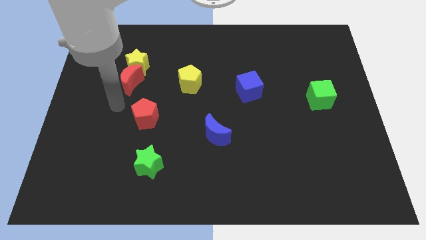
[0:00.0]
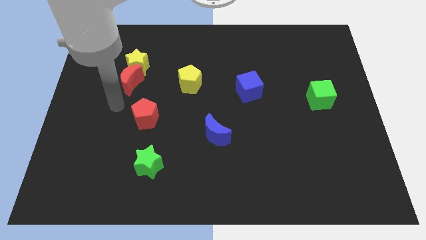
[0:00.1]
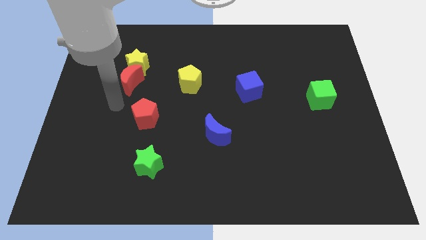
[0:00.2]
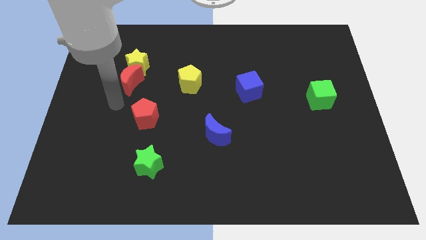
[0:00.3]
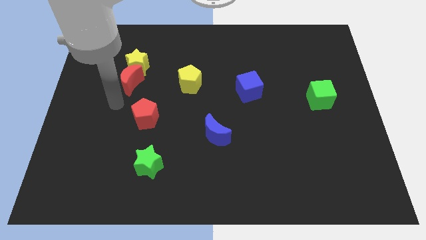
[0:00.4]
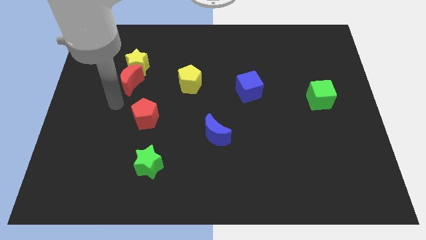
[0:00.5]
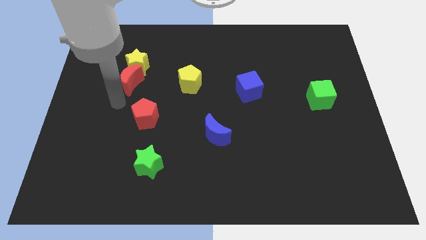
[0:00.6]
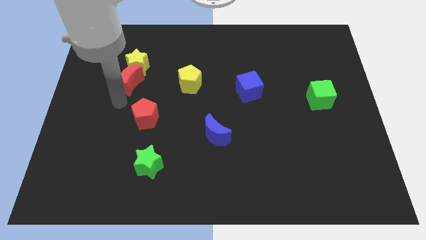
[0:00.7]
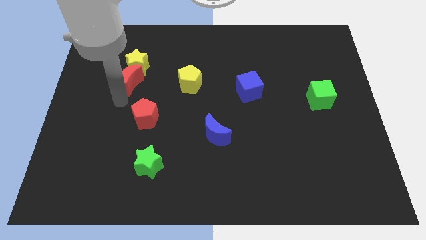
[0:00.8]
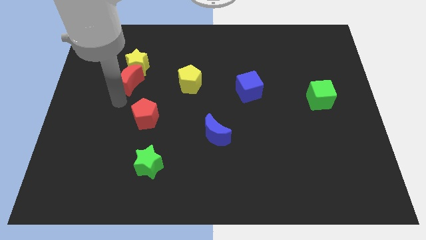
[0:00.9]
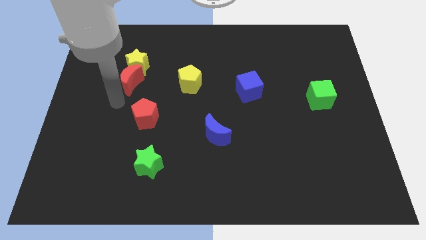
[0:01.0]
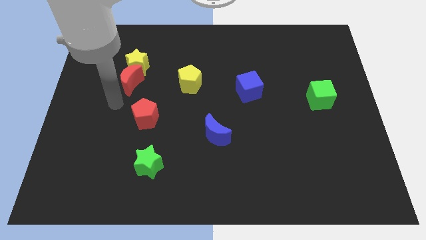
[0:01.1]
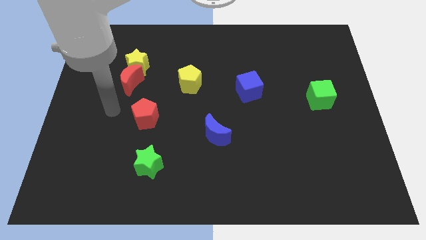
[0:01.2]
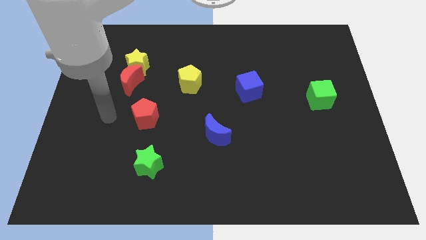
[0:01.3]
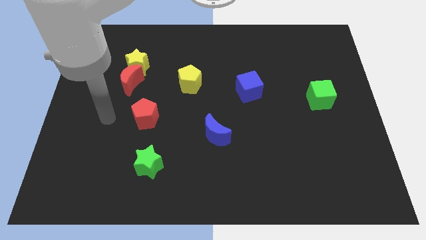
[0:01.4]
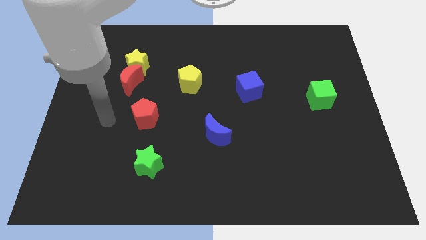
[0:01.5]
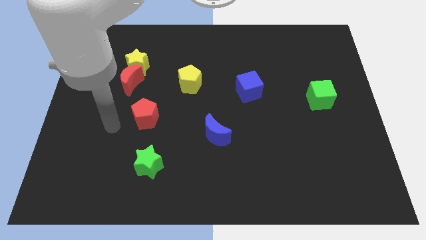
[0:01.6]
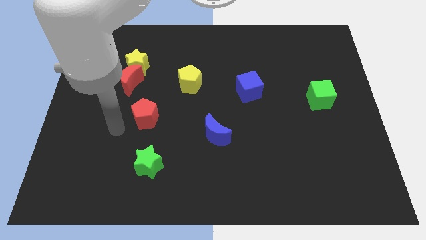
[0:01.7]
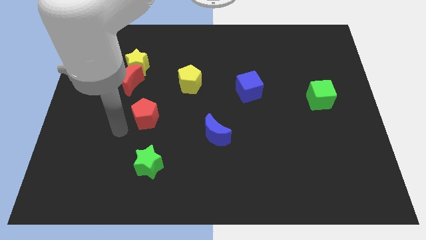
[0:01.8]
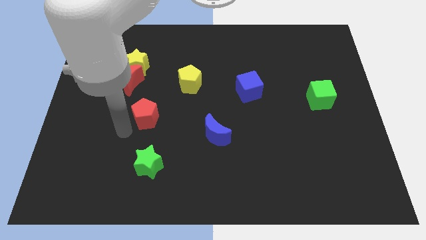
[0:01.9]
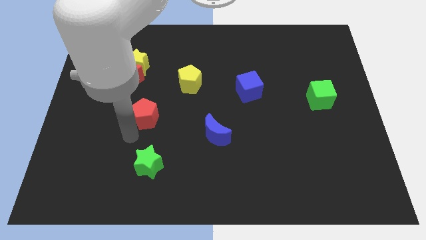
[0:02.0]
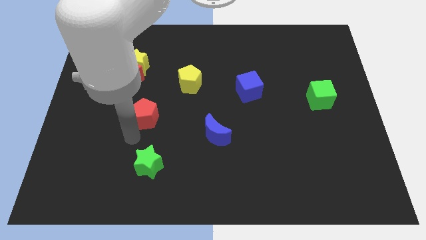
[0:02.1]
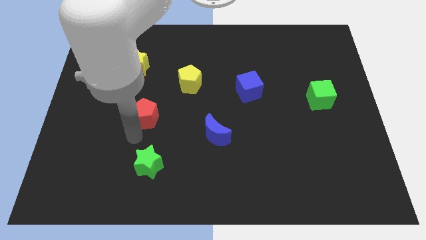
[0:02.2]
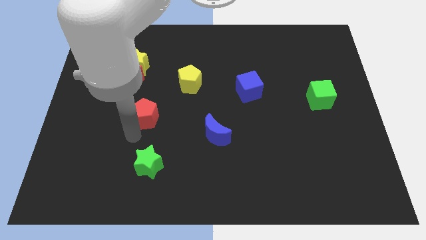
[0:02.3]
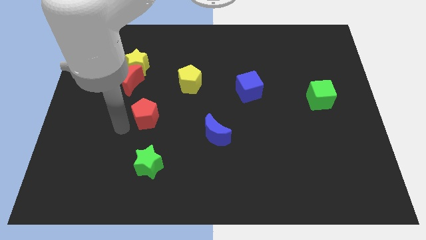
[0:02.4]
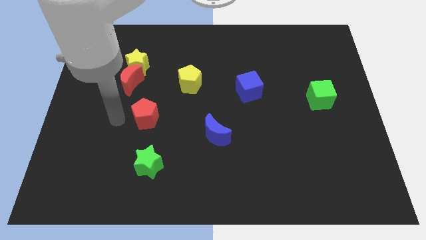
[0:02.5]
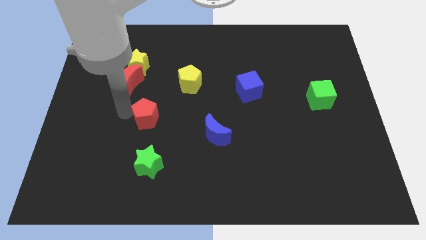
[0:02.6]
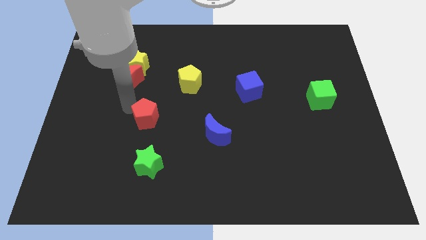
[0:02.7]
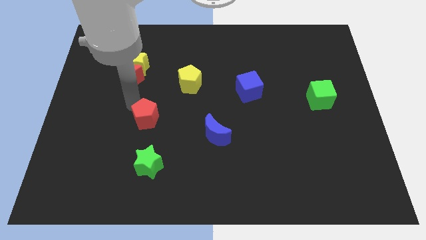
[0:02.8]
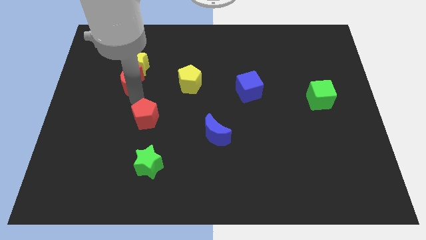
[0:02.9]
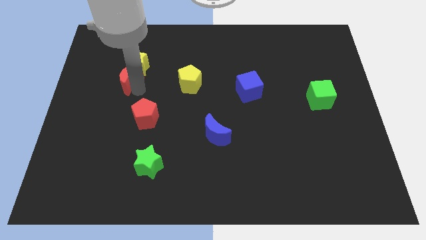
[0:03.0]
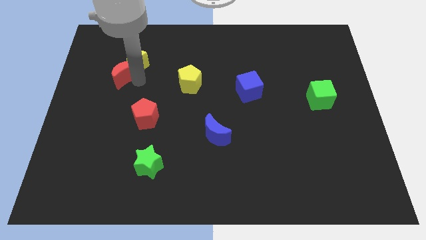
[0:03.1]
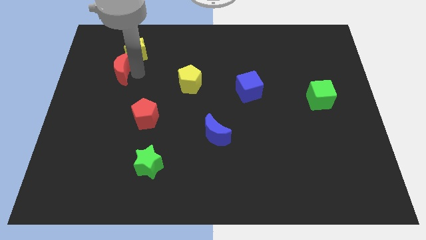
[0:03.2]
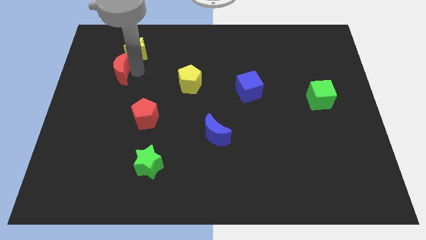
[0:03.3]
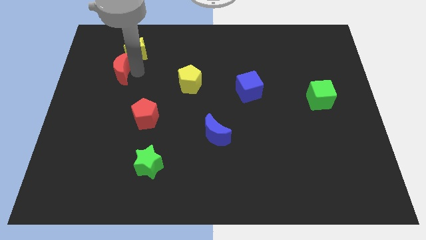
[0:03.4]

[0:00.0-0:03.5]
slightly push the red moon and yellow star towards the top side of the board

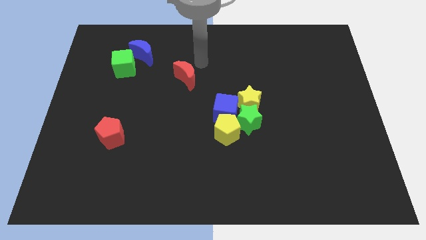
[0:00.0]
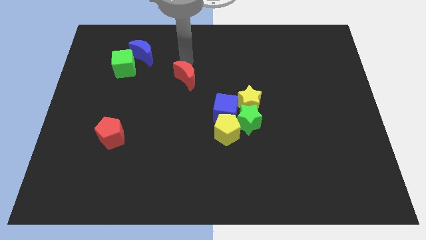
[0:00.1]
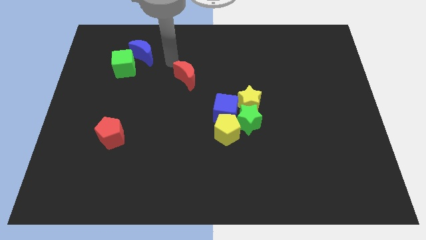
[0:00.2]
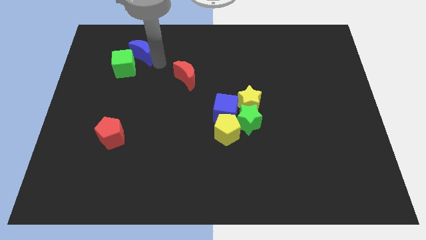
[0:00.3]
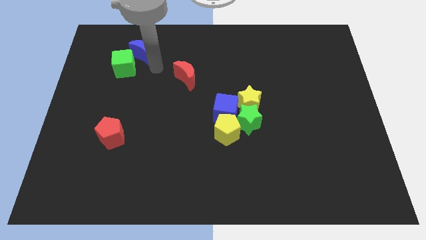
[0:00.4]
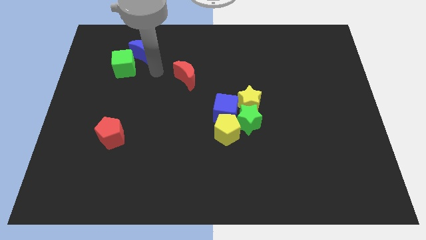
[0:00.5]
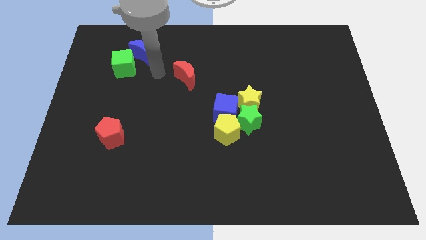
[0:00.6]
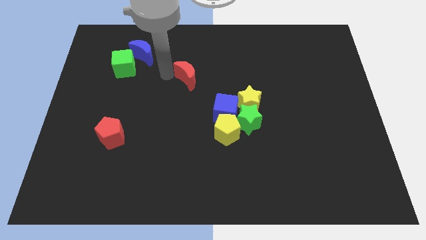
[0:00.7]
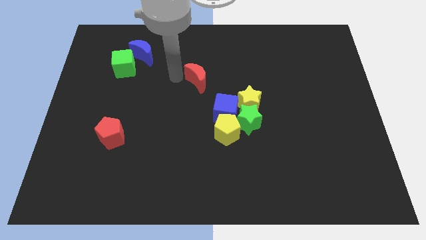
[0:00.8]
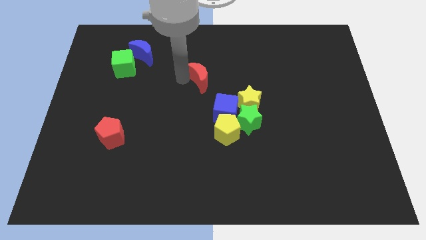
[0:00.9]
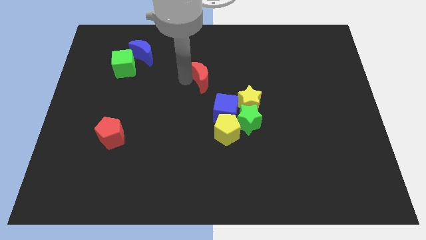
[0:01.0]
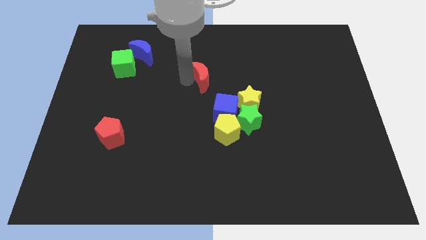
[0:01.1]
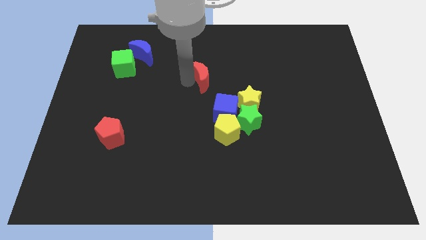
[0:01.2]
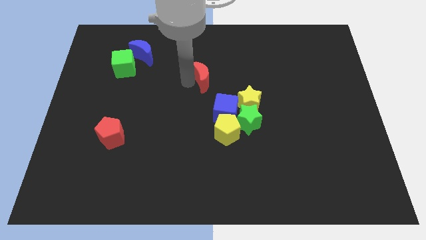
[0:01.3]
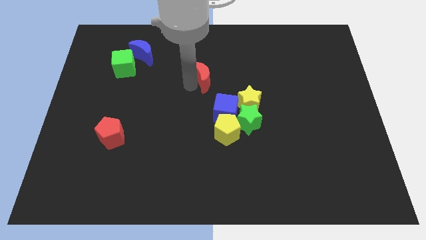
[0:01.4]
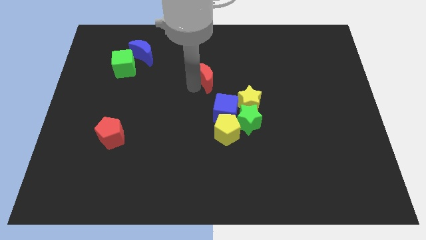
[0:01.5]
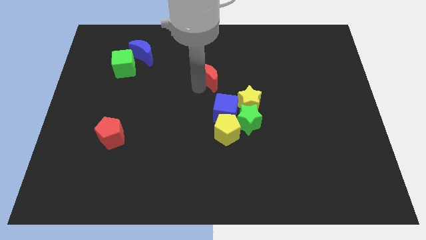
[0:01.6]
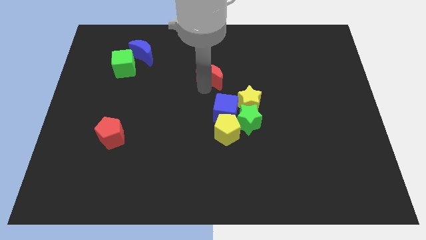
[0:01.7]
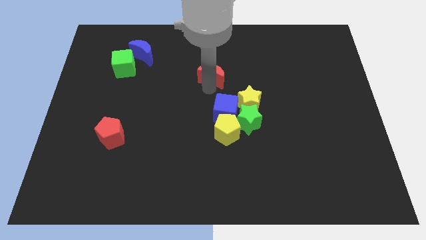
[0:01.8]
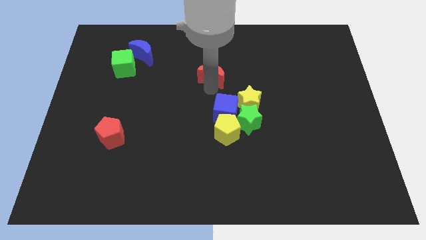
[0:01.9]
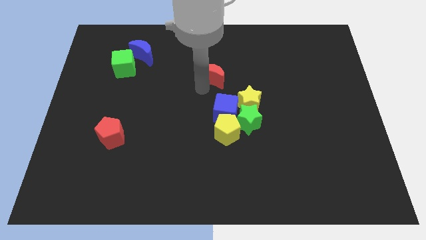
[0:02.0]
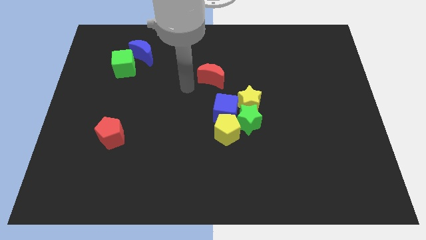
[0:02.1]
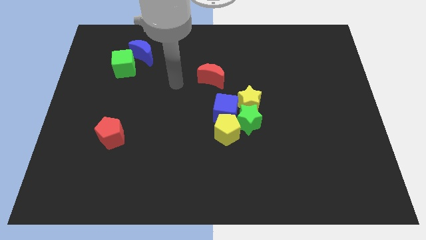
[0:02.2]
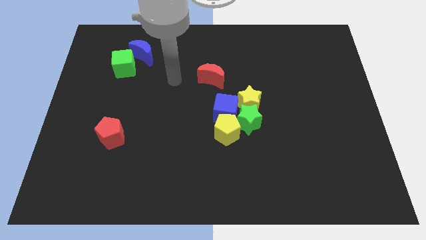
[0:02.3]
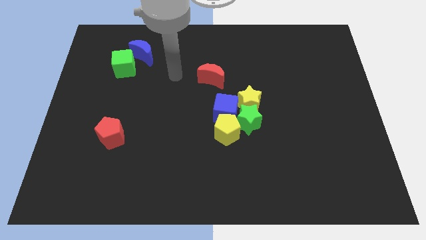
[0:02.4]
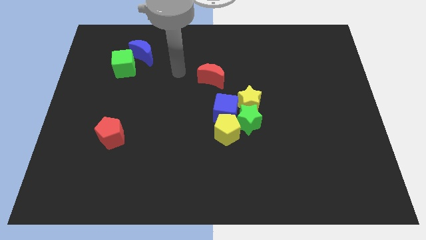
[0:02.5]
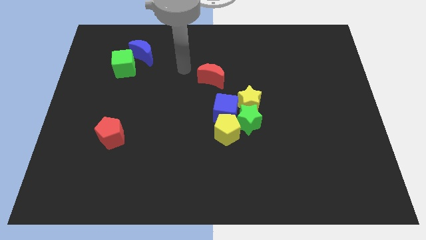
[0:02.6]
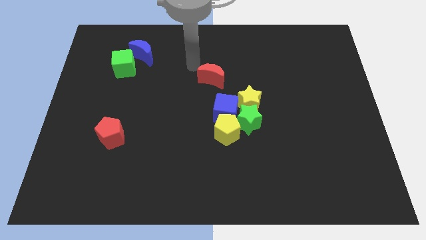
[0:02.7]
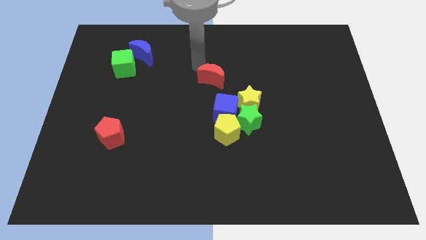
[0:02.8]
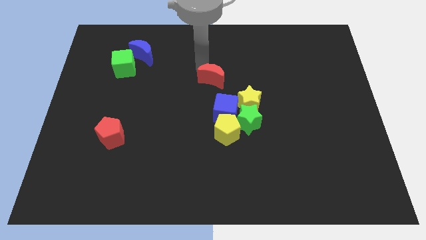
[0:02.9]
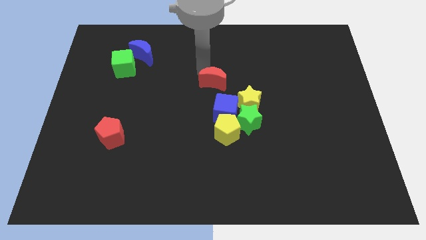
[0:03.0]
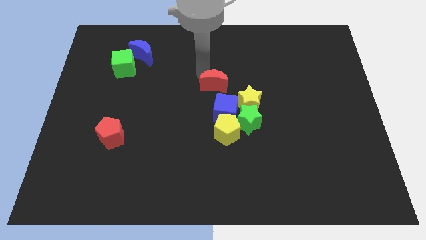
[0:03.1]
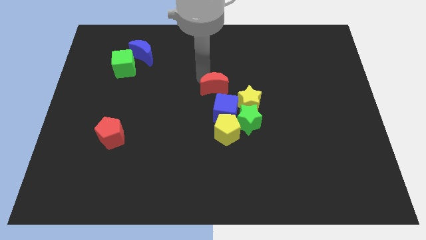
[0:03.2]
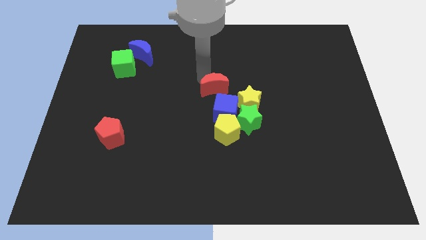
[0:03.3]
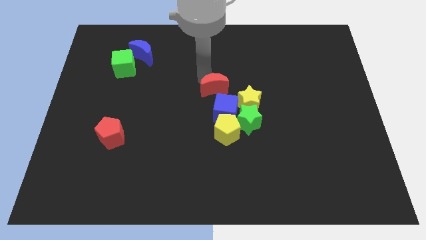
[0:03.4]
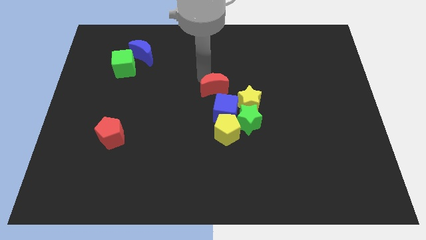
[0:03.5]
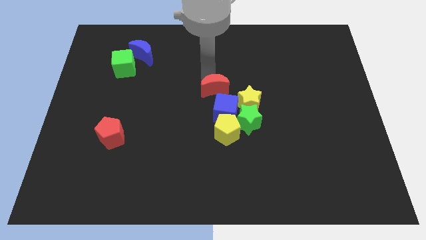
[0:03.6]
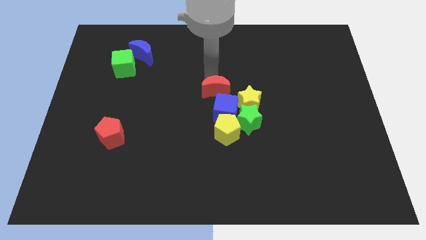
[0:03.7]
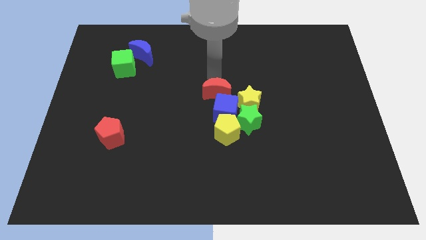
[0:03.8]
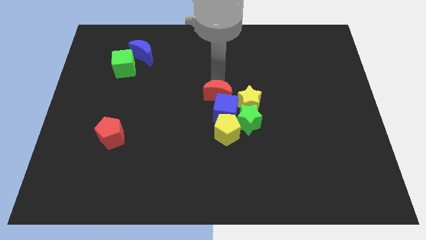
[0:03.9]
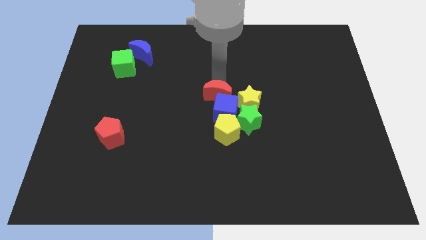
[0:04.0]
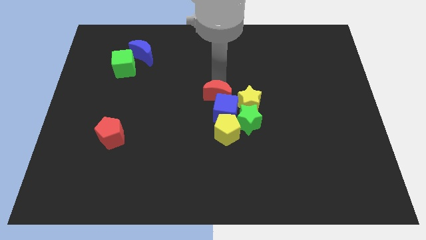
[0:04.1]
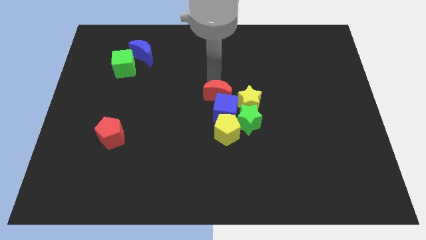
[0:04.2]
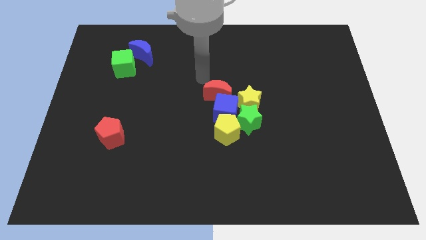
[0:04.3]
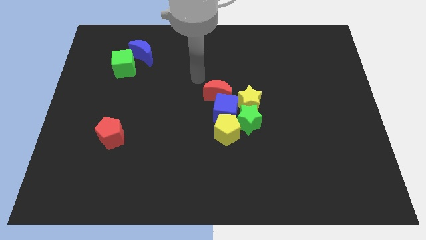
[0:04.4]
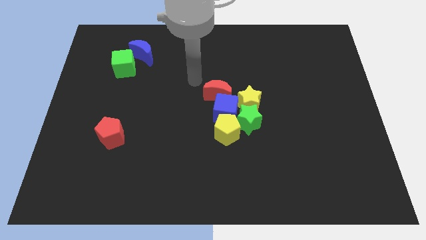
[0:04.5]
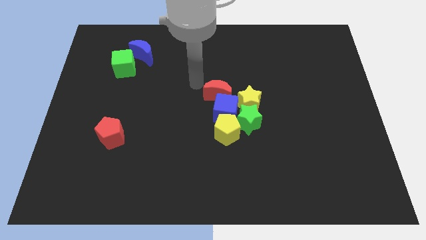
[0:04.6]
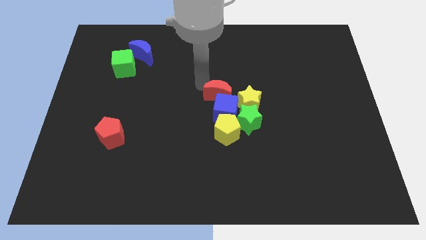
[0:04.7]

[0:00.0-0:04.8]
drag the red moon to the top side of the blue cube

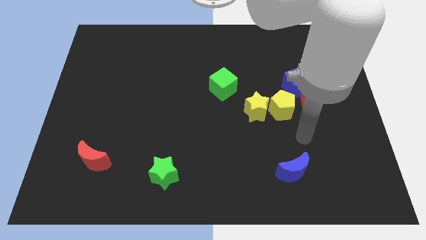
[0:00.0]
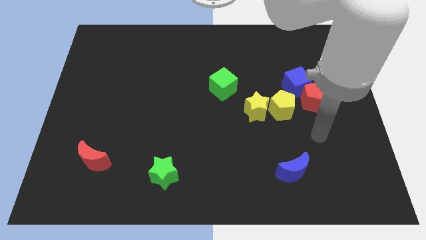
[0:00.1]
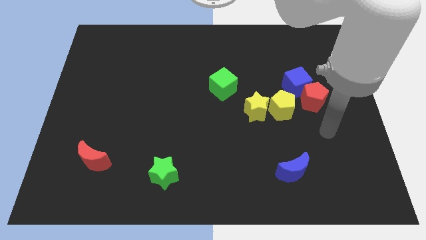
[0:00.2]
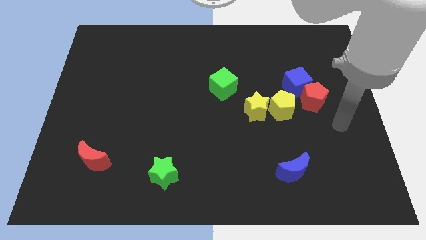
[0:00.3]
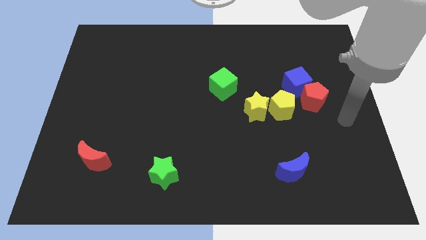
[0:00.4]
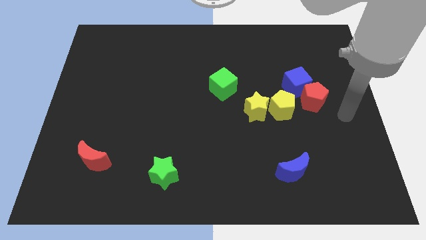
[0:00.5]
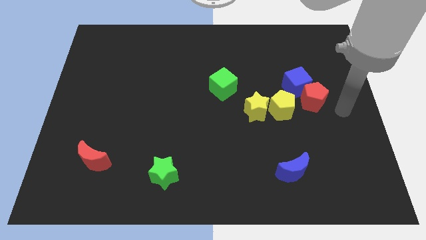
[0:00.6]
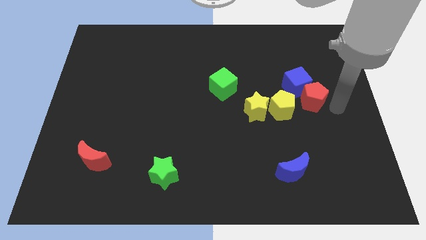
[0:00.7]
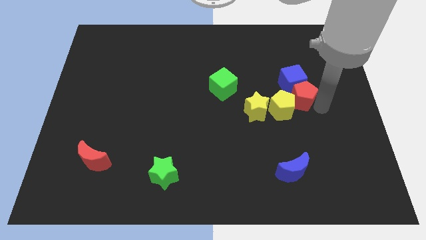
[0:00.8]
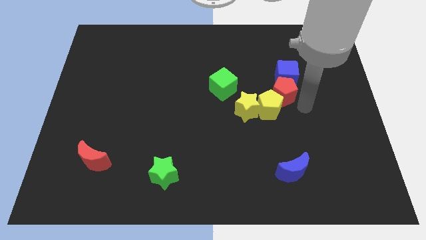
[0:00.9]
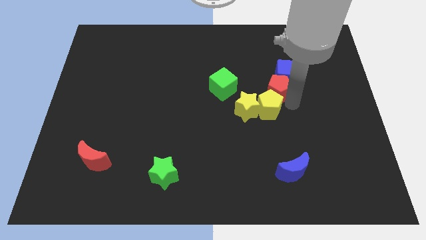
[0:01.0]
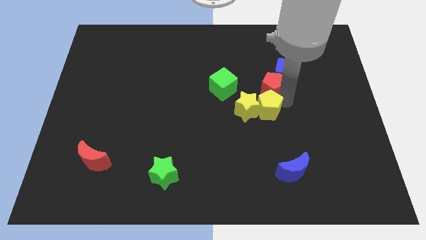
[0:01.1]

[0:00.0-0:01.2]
push the red pentagon between the blue cube and yellow pentagon
